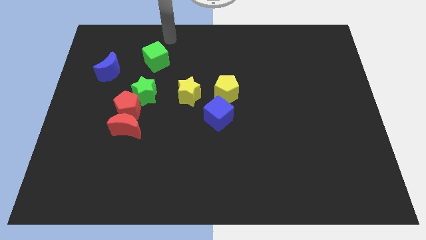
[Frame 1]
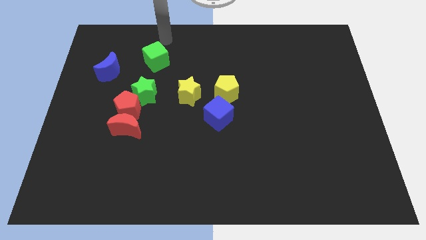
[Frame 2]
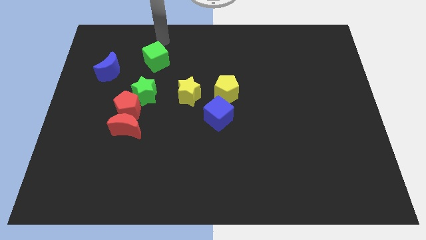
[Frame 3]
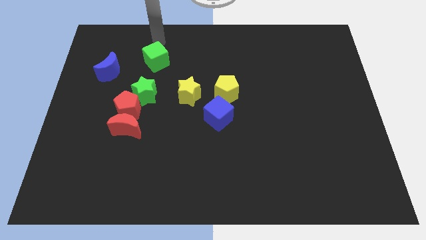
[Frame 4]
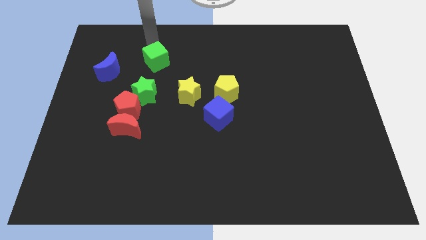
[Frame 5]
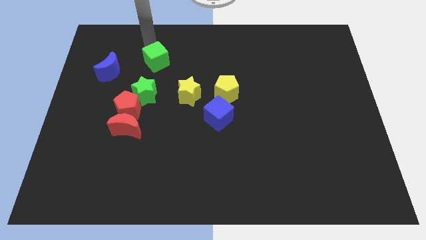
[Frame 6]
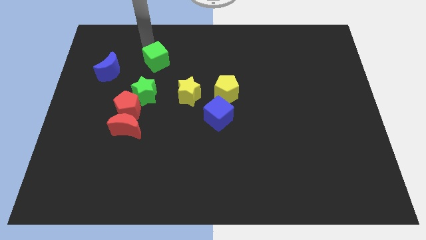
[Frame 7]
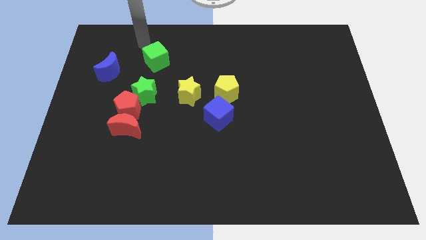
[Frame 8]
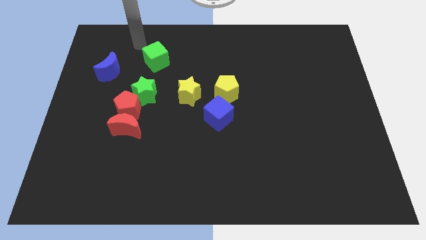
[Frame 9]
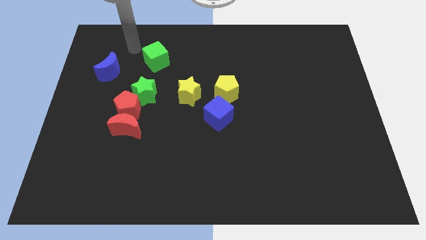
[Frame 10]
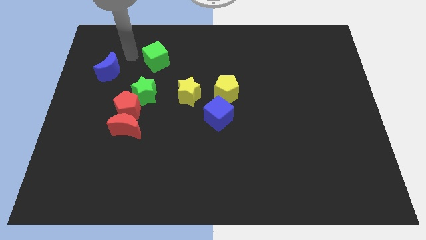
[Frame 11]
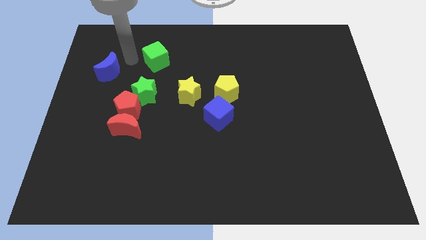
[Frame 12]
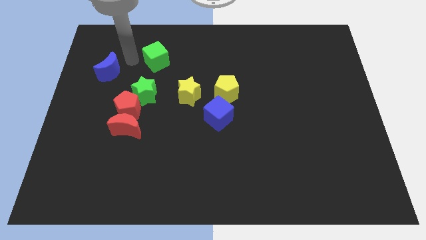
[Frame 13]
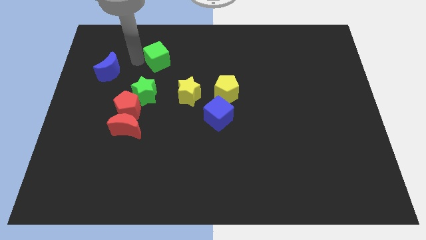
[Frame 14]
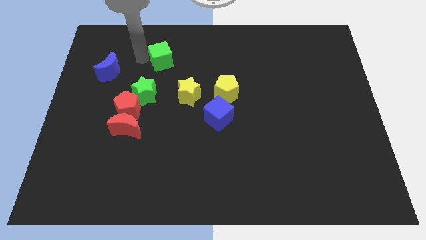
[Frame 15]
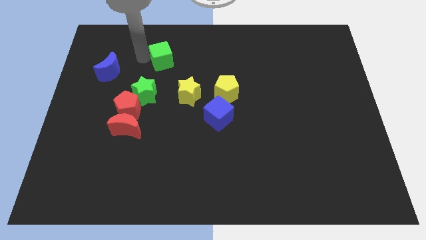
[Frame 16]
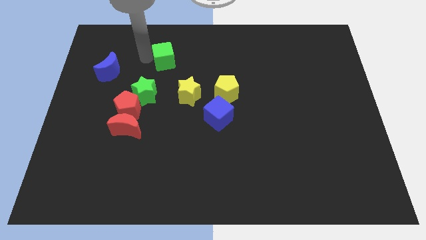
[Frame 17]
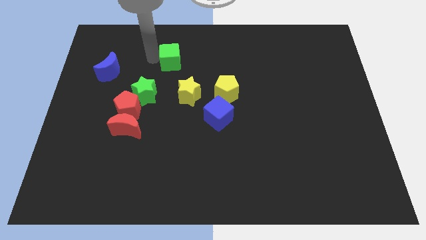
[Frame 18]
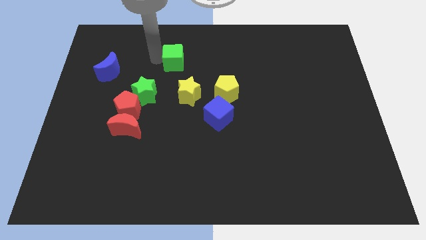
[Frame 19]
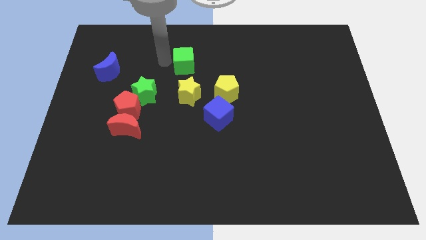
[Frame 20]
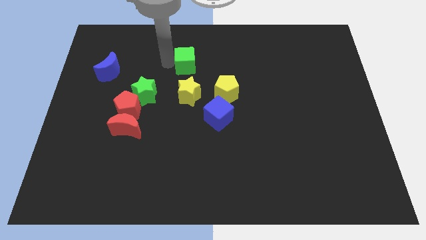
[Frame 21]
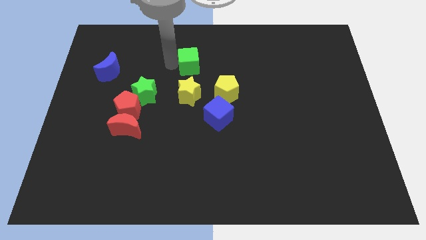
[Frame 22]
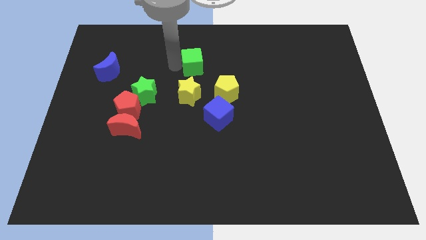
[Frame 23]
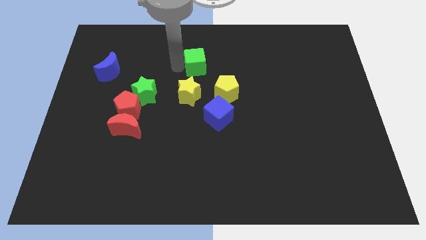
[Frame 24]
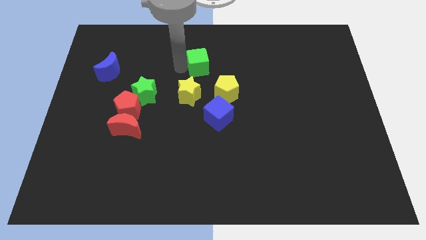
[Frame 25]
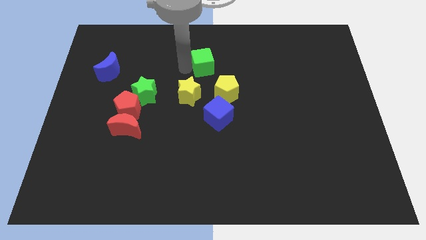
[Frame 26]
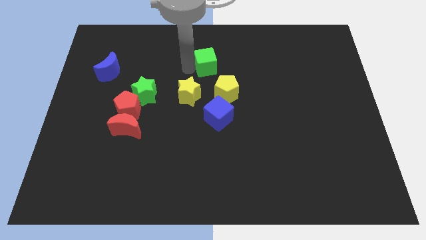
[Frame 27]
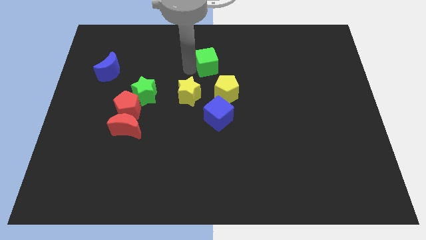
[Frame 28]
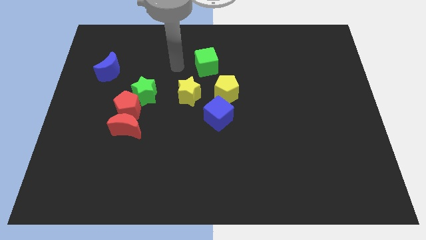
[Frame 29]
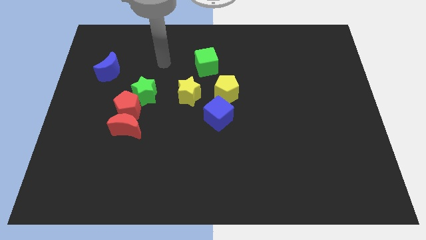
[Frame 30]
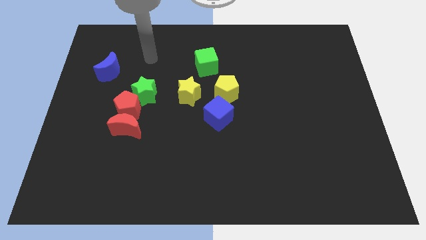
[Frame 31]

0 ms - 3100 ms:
place the green cube at the top of yellow blocks

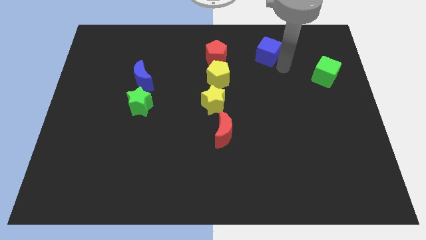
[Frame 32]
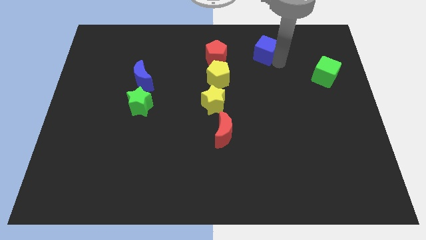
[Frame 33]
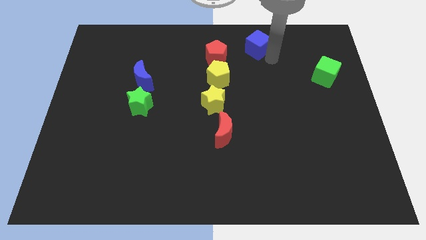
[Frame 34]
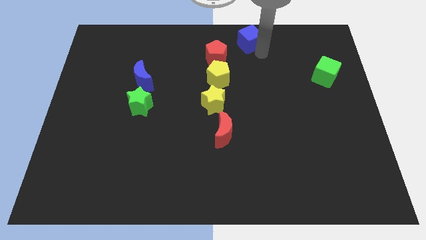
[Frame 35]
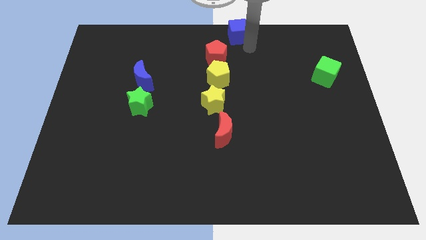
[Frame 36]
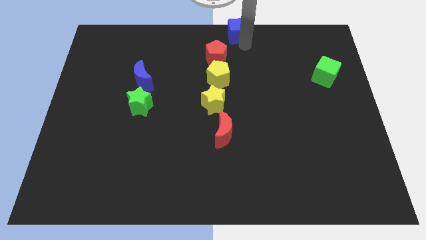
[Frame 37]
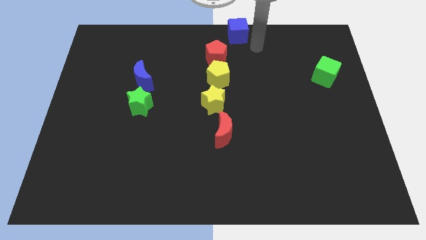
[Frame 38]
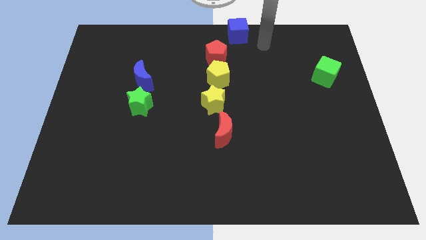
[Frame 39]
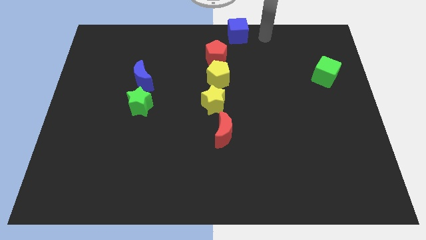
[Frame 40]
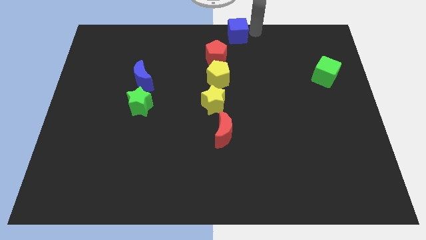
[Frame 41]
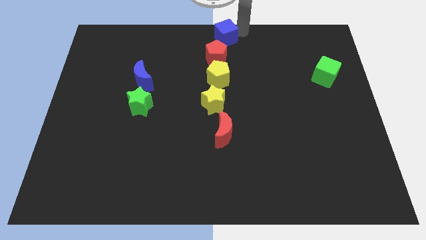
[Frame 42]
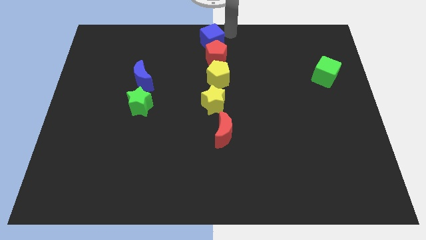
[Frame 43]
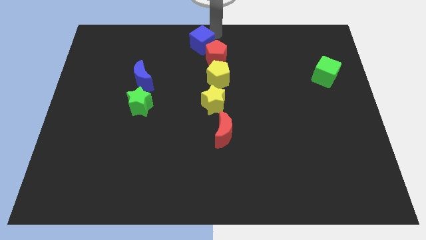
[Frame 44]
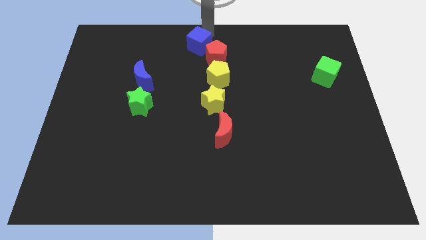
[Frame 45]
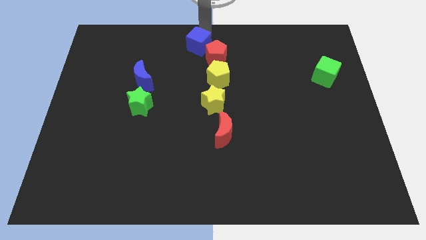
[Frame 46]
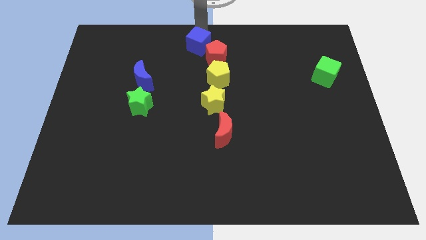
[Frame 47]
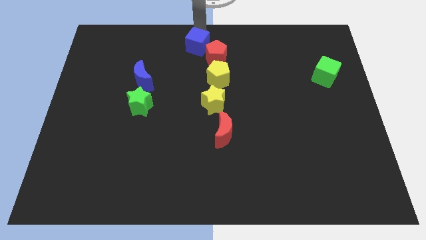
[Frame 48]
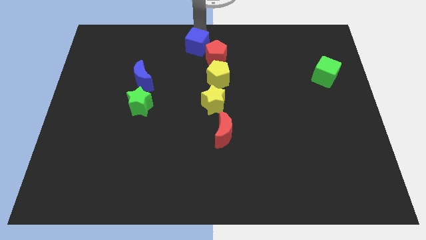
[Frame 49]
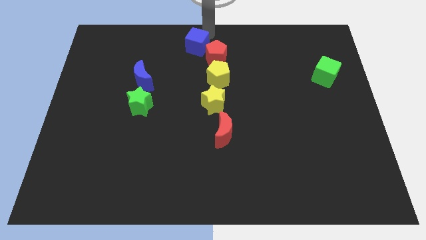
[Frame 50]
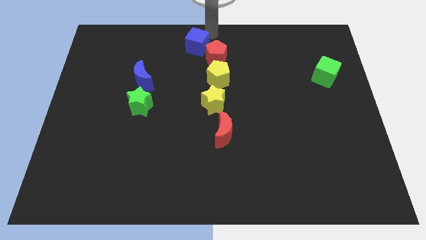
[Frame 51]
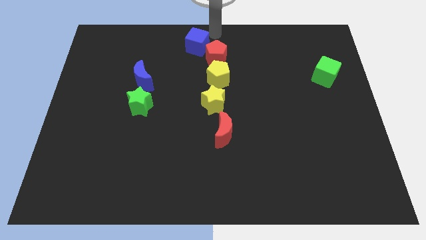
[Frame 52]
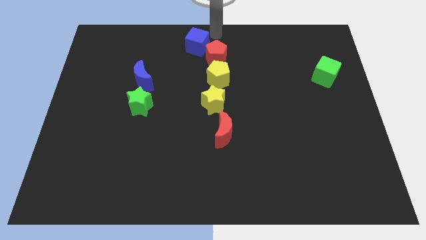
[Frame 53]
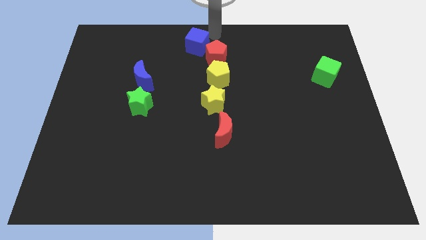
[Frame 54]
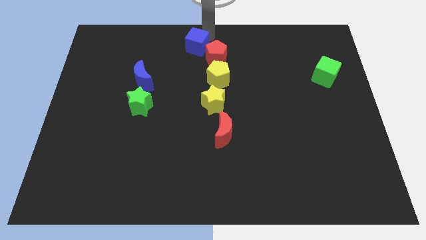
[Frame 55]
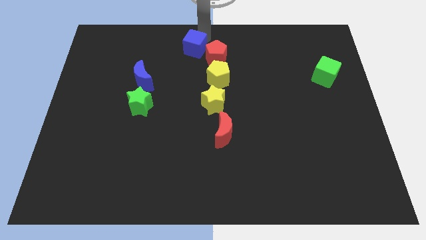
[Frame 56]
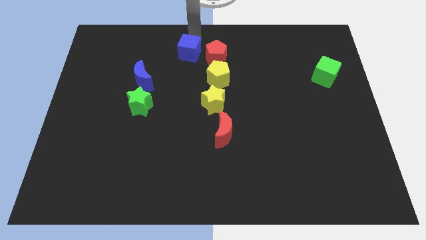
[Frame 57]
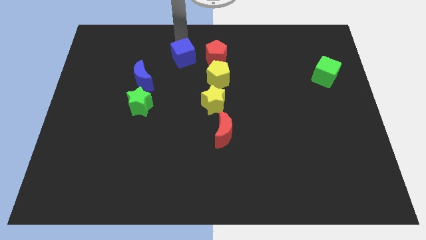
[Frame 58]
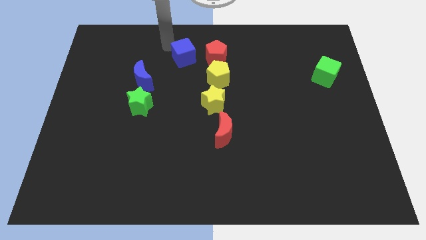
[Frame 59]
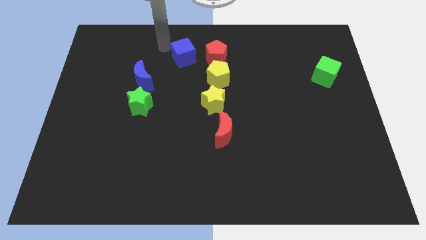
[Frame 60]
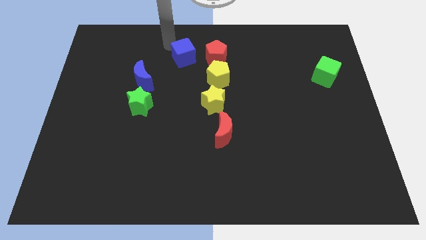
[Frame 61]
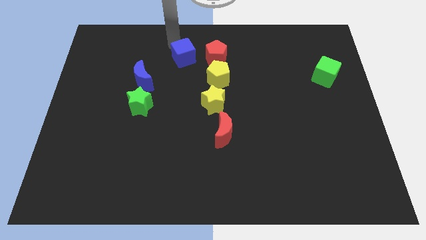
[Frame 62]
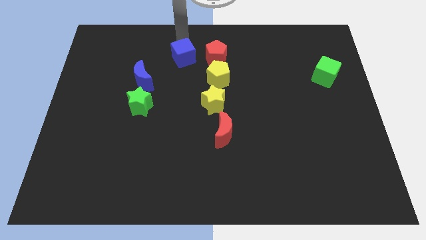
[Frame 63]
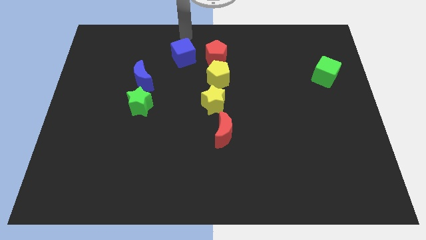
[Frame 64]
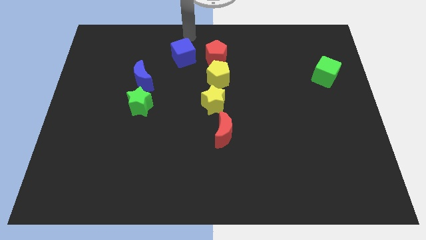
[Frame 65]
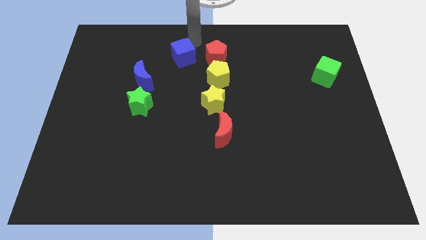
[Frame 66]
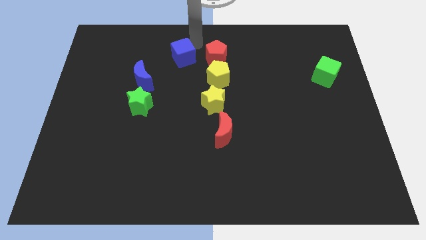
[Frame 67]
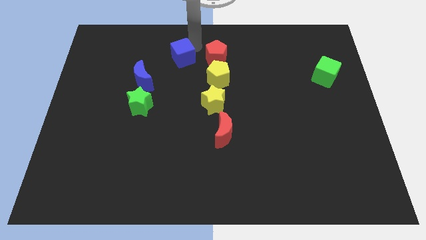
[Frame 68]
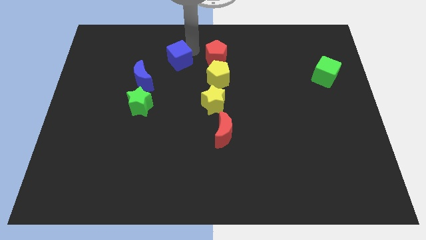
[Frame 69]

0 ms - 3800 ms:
put the blue cube to the left side of the red pentagon

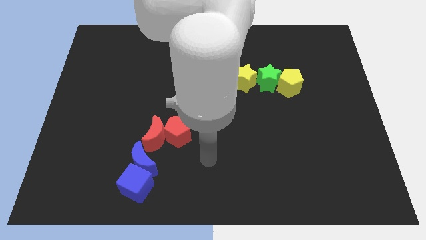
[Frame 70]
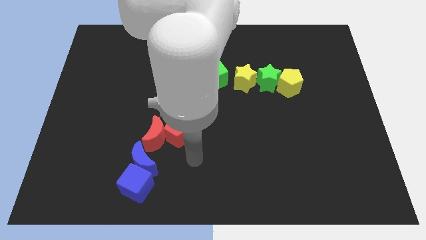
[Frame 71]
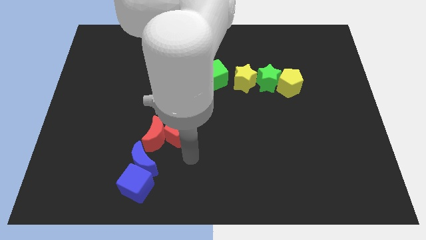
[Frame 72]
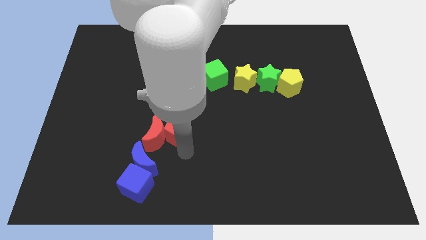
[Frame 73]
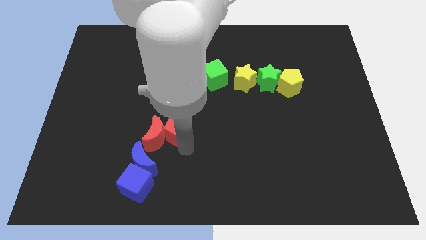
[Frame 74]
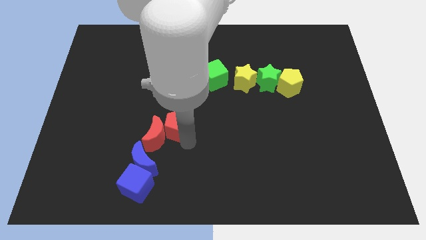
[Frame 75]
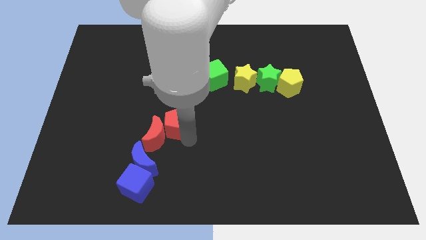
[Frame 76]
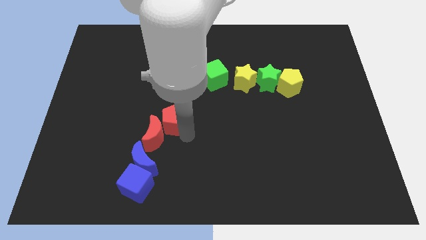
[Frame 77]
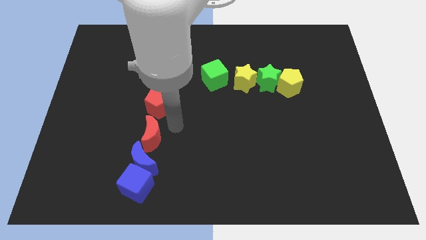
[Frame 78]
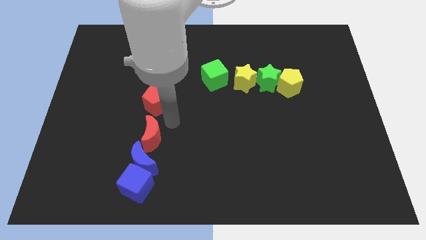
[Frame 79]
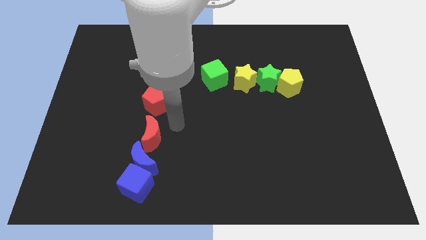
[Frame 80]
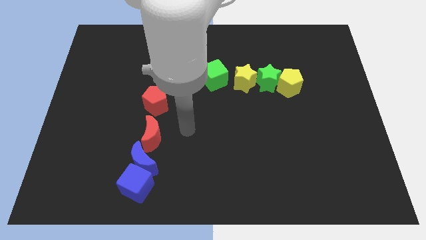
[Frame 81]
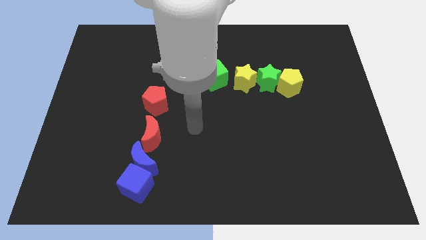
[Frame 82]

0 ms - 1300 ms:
push the red pentagon above the red crescent

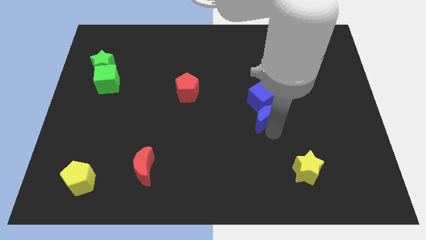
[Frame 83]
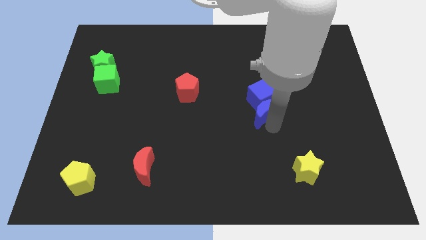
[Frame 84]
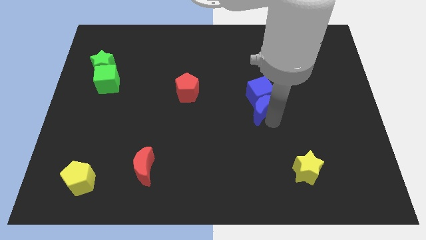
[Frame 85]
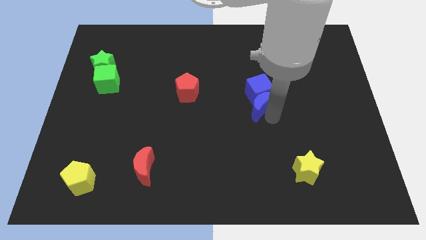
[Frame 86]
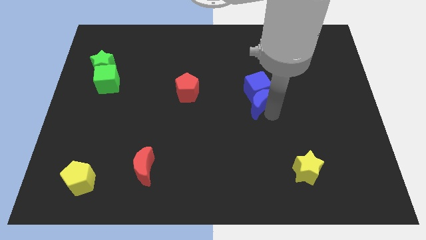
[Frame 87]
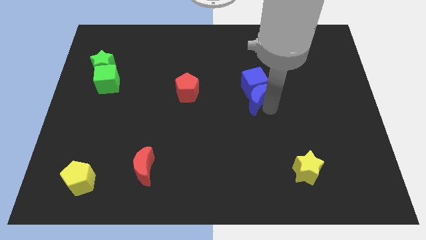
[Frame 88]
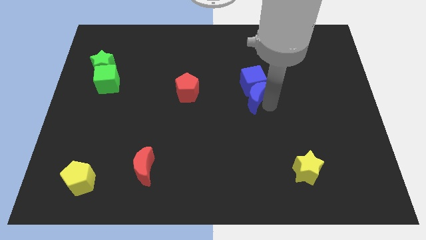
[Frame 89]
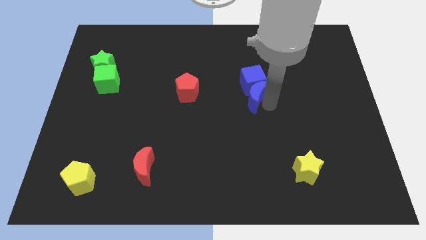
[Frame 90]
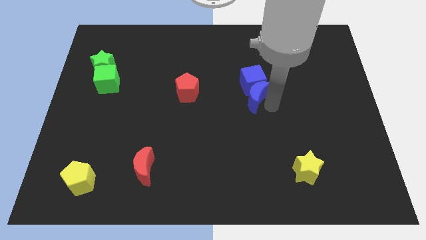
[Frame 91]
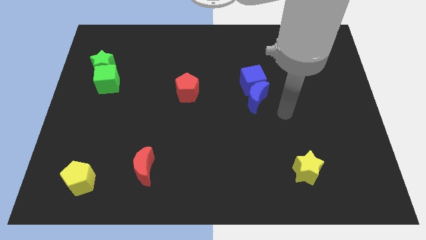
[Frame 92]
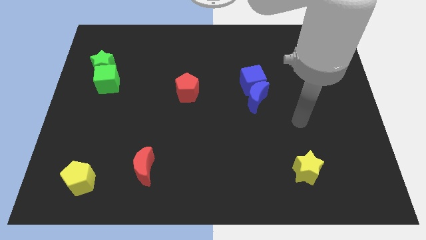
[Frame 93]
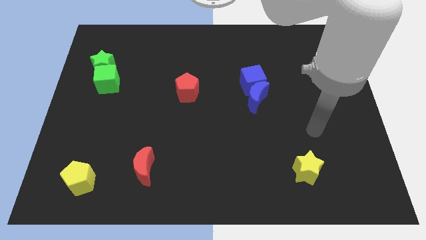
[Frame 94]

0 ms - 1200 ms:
push the blue crescent along with the blue cube slightly top of the board
